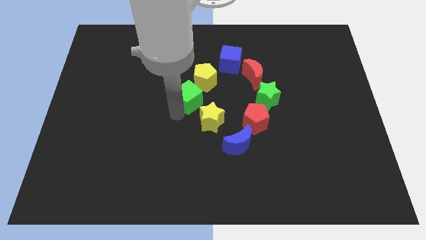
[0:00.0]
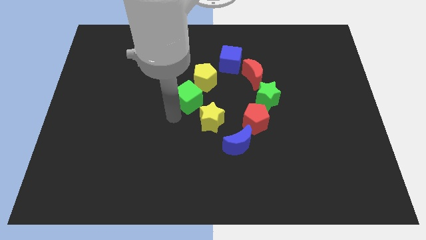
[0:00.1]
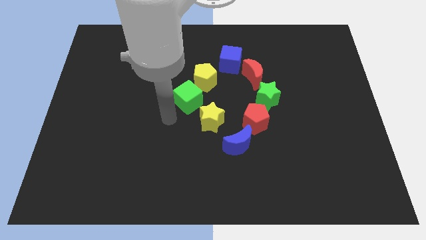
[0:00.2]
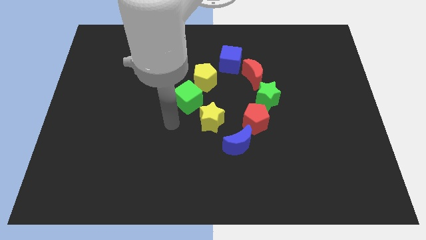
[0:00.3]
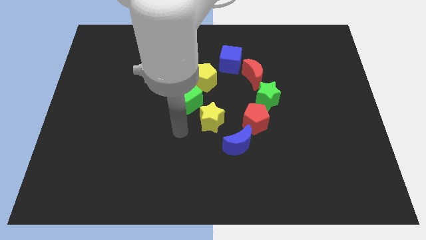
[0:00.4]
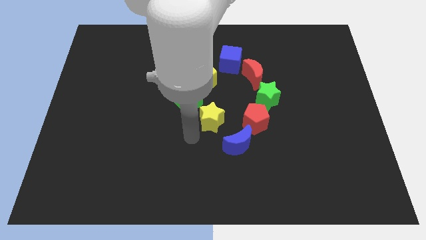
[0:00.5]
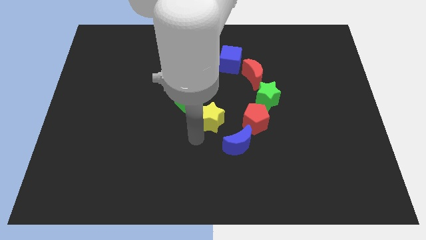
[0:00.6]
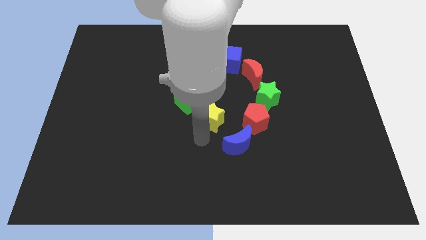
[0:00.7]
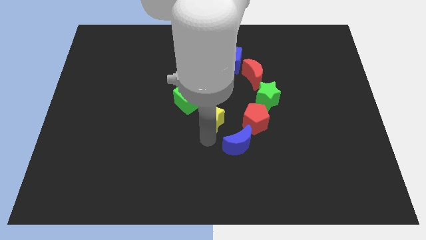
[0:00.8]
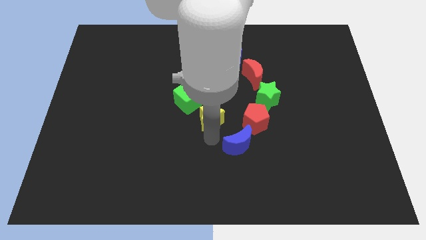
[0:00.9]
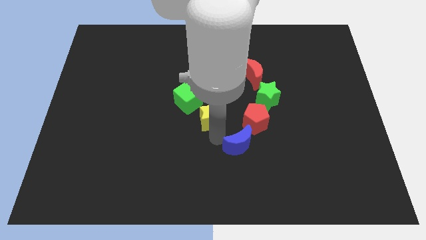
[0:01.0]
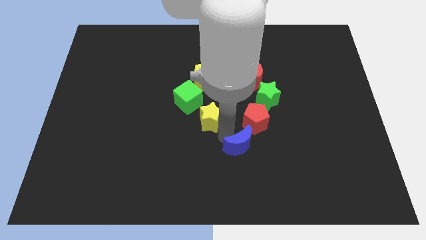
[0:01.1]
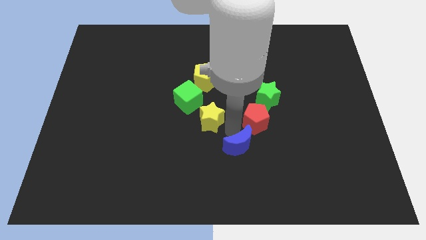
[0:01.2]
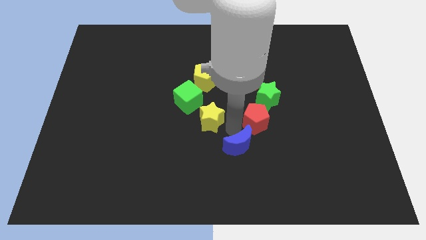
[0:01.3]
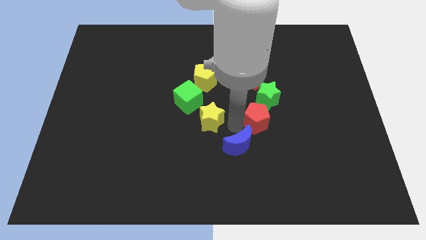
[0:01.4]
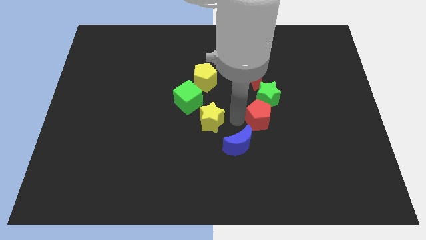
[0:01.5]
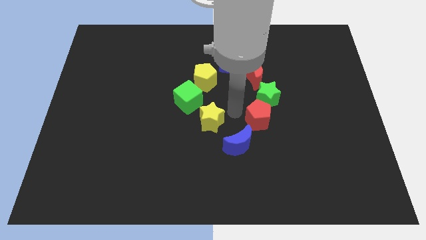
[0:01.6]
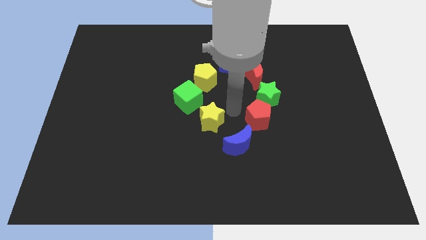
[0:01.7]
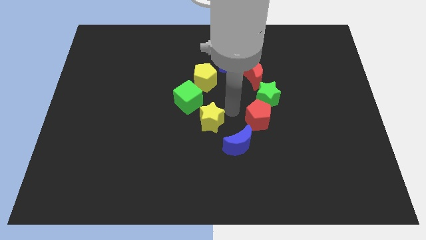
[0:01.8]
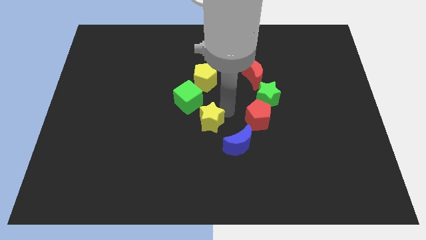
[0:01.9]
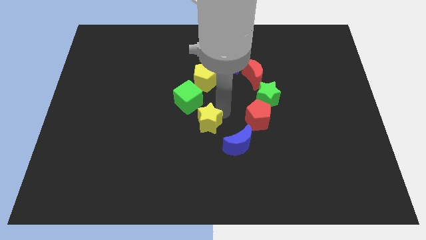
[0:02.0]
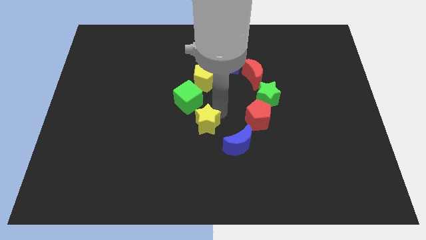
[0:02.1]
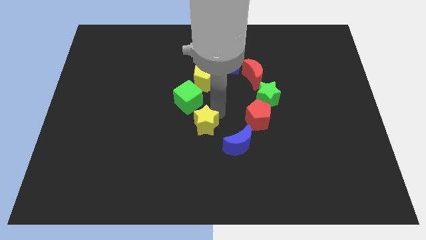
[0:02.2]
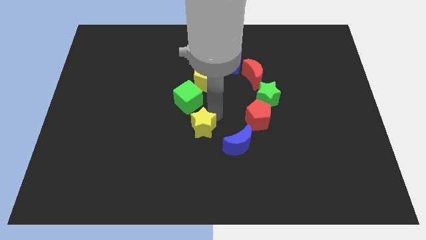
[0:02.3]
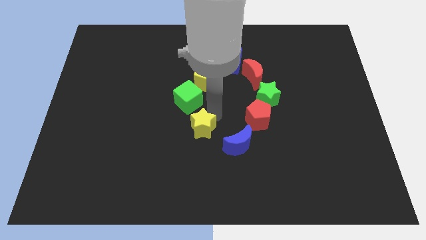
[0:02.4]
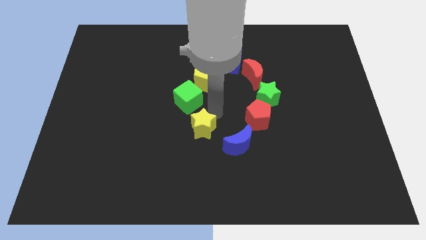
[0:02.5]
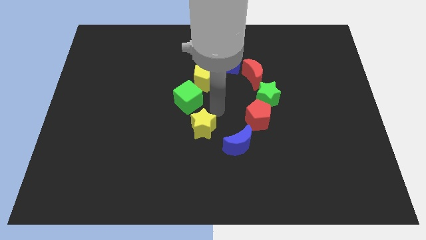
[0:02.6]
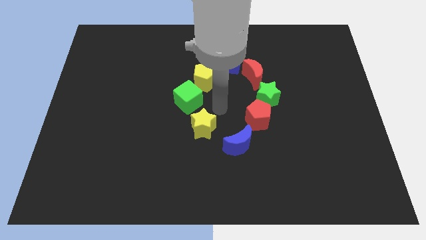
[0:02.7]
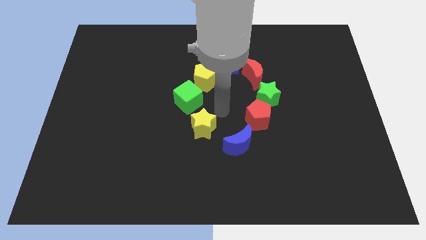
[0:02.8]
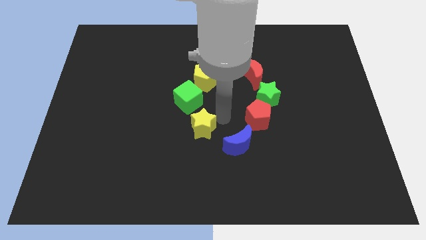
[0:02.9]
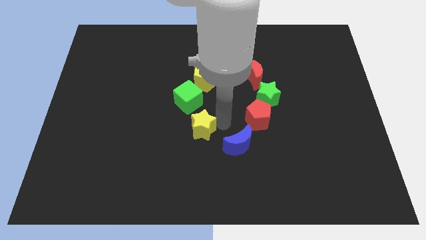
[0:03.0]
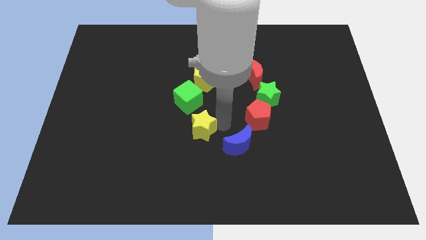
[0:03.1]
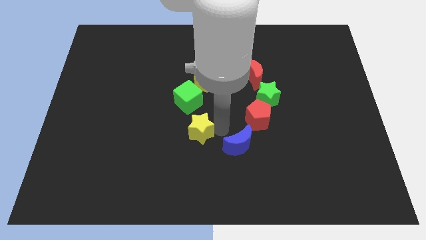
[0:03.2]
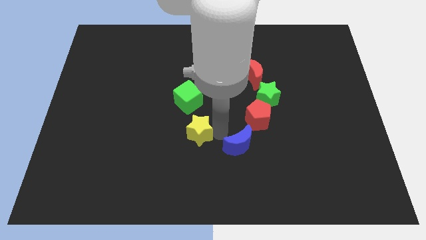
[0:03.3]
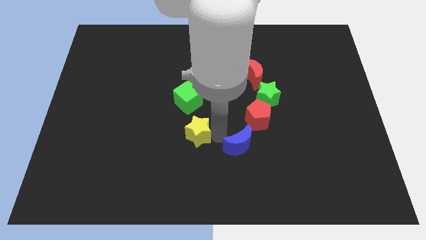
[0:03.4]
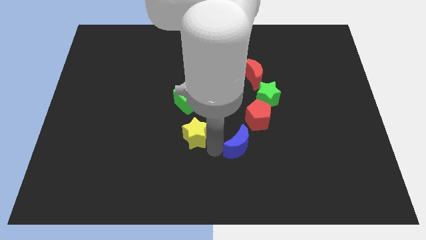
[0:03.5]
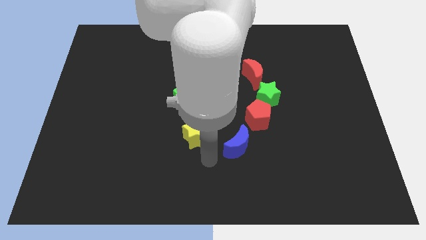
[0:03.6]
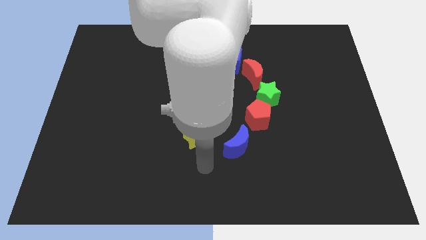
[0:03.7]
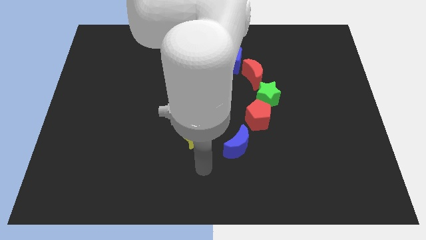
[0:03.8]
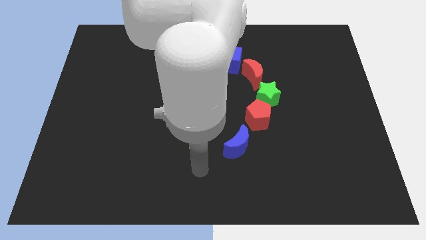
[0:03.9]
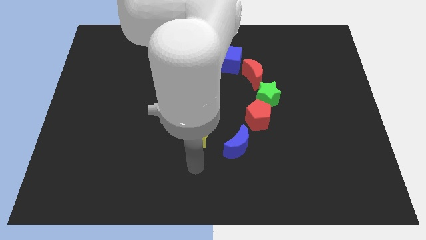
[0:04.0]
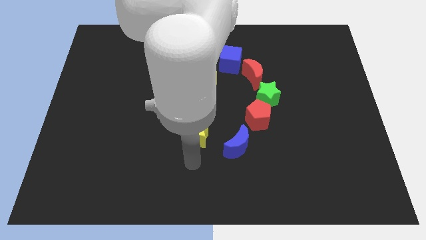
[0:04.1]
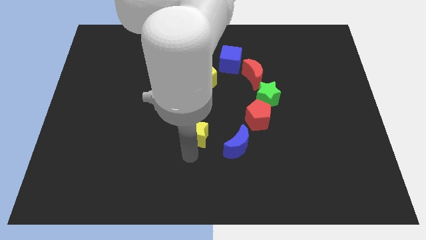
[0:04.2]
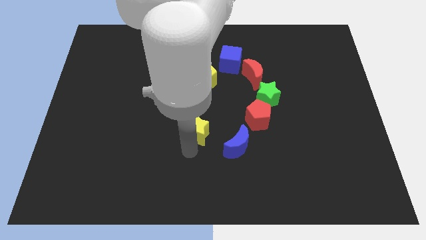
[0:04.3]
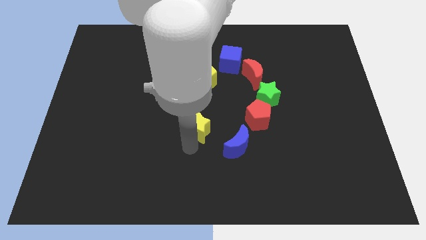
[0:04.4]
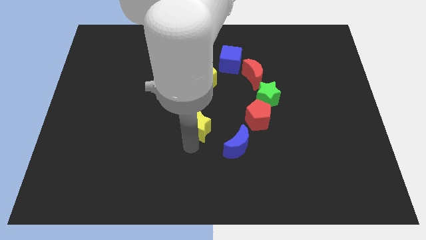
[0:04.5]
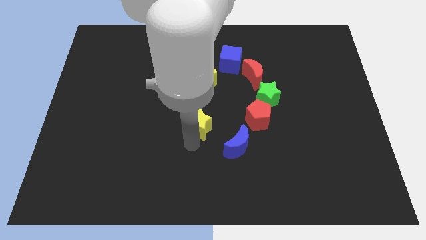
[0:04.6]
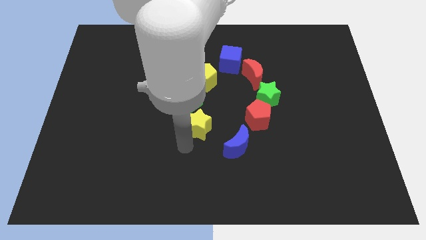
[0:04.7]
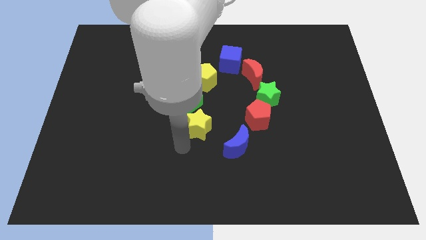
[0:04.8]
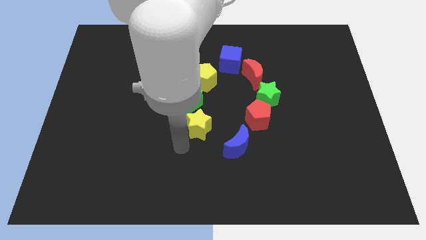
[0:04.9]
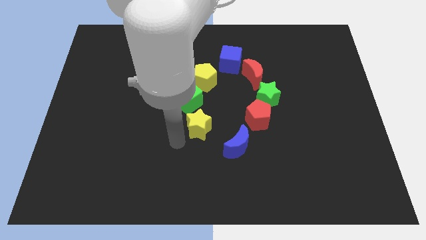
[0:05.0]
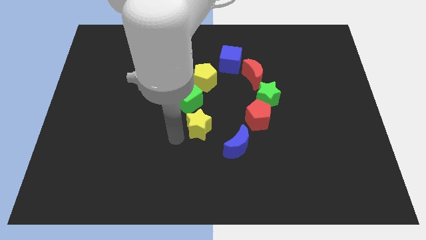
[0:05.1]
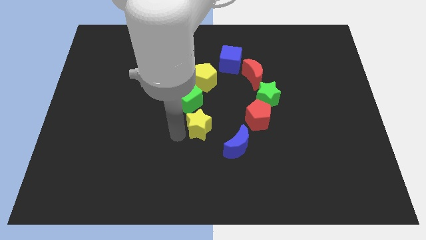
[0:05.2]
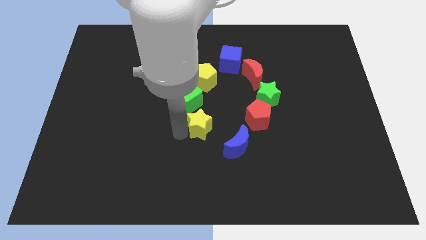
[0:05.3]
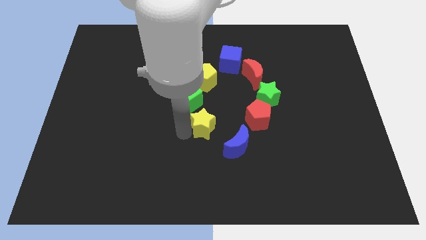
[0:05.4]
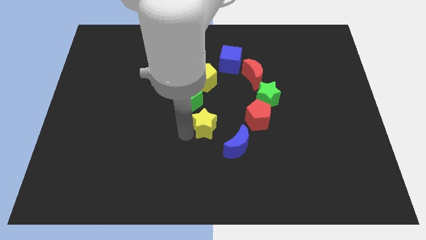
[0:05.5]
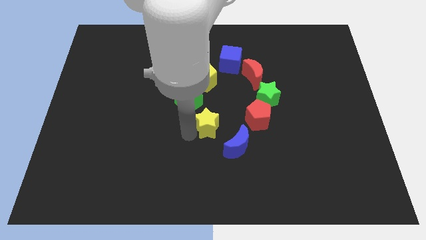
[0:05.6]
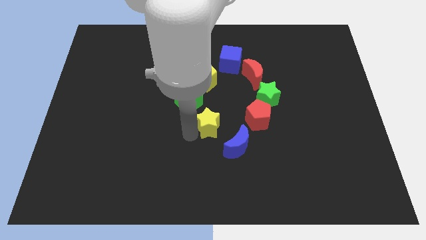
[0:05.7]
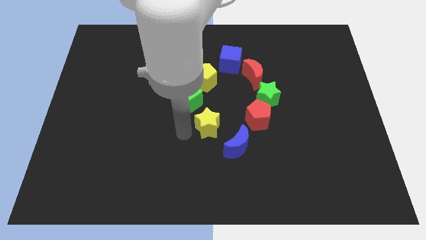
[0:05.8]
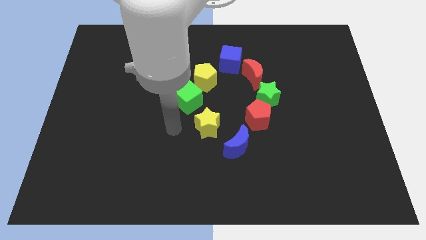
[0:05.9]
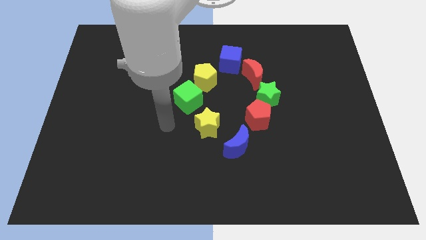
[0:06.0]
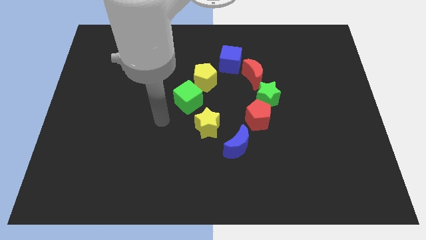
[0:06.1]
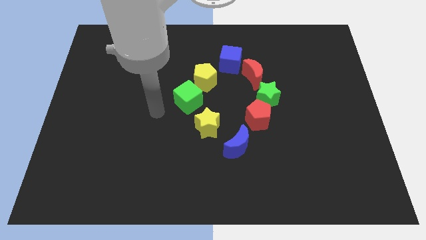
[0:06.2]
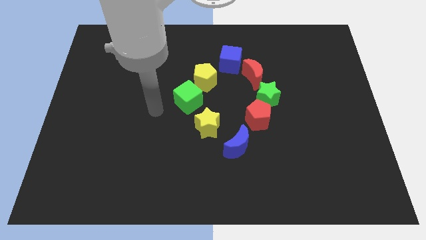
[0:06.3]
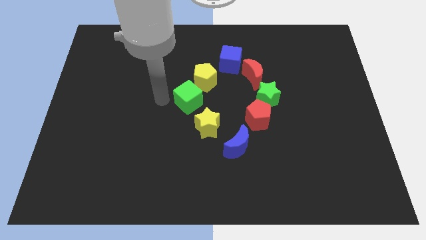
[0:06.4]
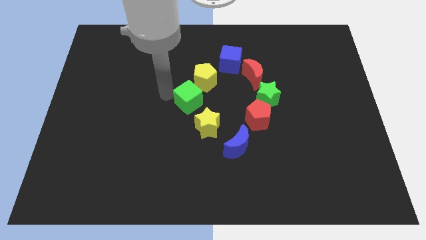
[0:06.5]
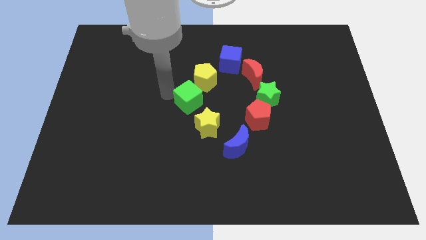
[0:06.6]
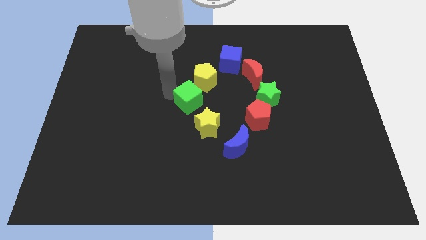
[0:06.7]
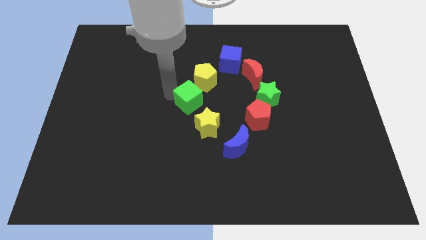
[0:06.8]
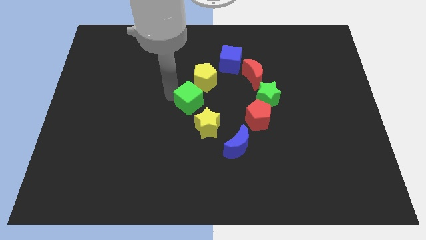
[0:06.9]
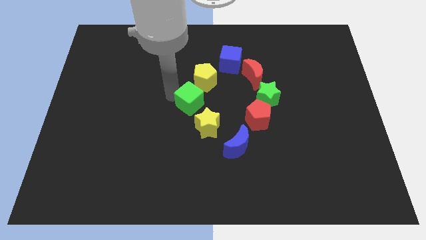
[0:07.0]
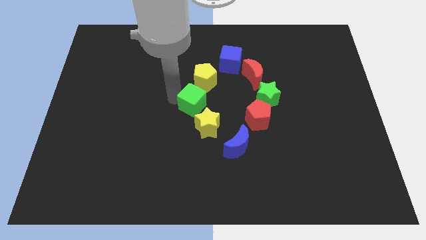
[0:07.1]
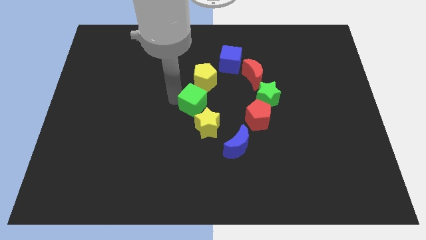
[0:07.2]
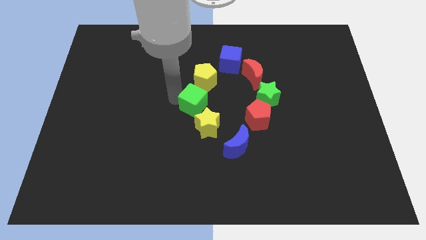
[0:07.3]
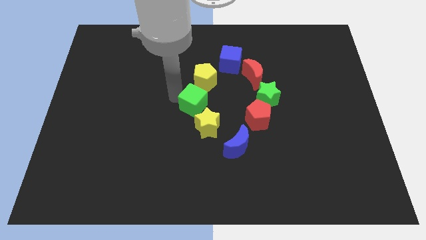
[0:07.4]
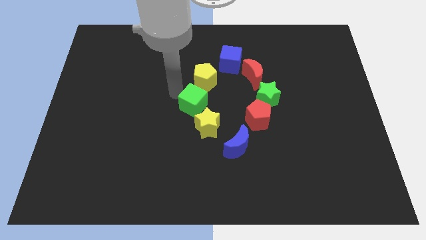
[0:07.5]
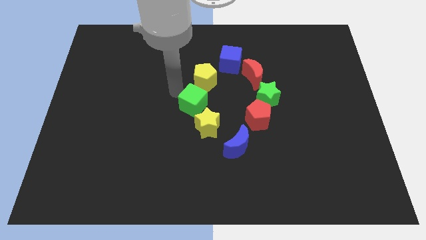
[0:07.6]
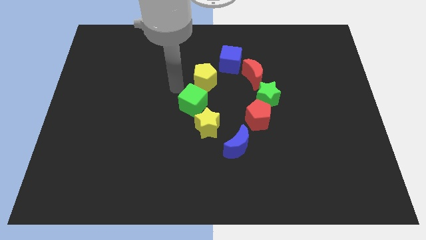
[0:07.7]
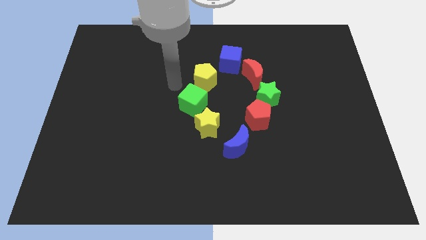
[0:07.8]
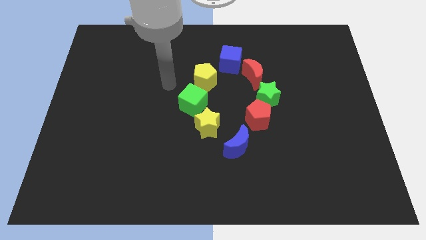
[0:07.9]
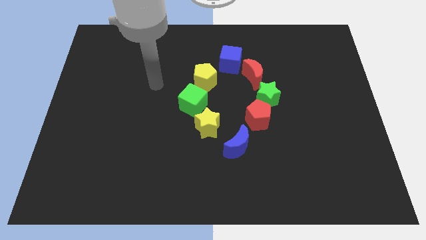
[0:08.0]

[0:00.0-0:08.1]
adjust the green star slightly

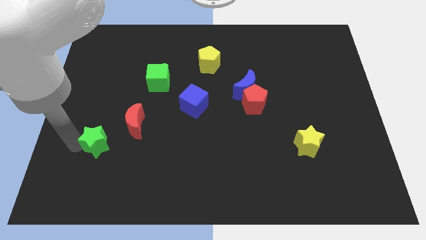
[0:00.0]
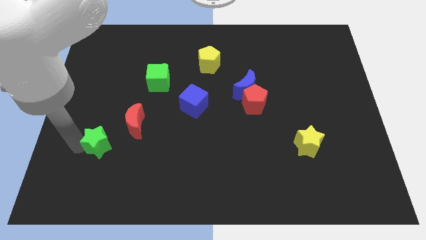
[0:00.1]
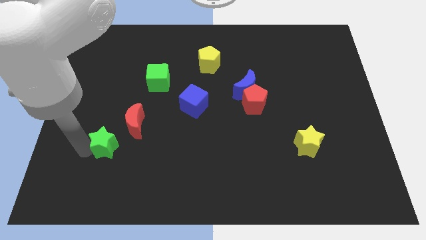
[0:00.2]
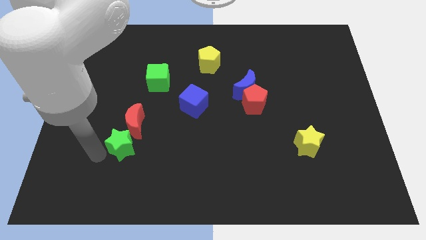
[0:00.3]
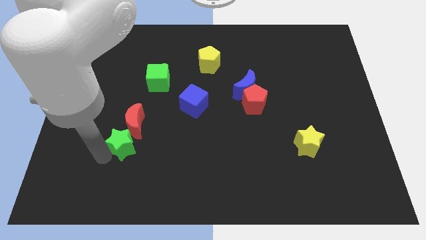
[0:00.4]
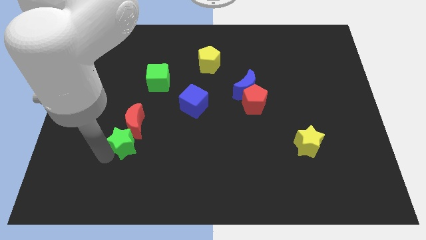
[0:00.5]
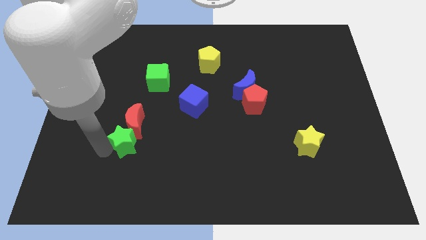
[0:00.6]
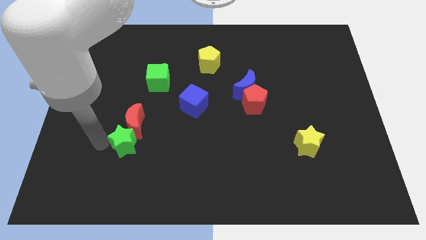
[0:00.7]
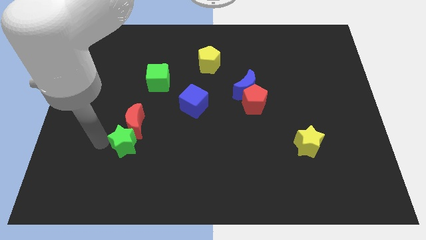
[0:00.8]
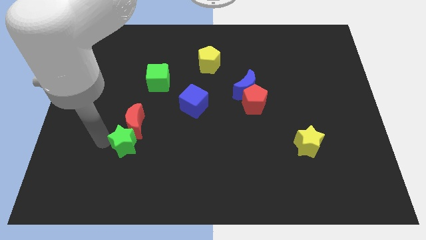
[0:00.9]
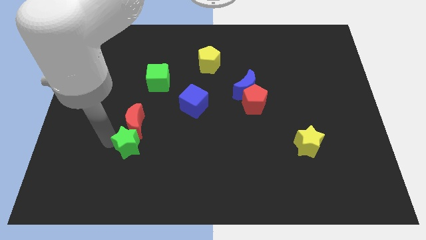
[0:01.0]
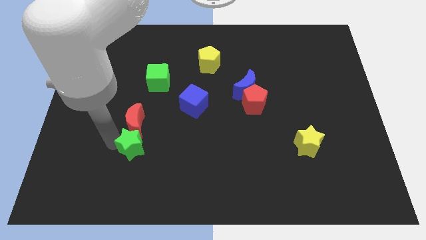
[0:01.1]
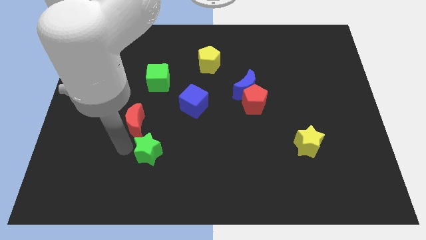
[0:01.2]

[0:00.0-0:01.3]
push the green star to the bottom right side of the red moon
